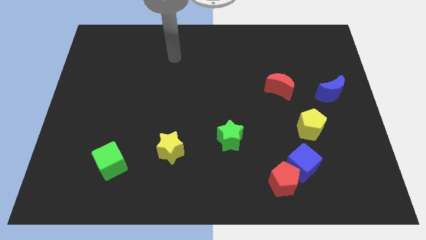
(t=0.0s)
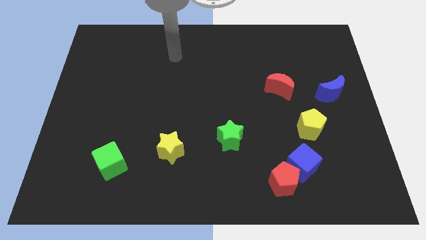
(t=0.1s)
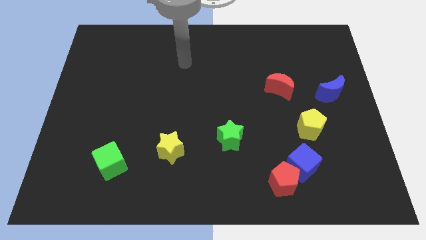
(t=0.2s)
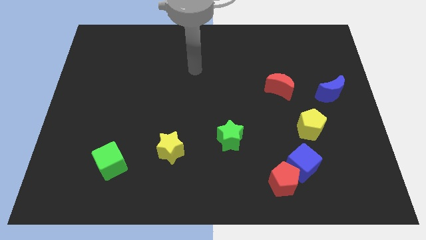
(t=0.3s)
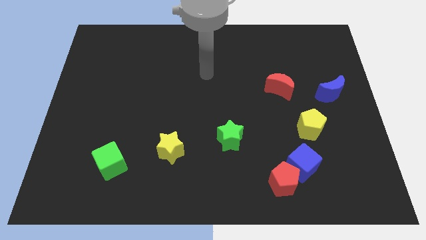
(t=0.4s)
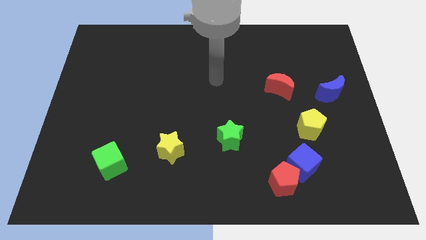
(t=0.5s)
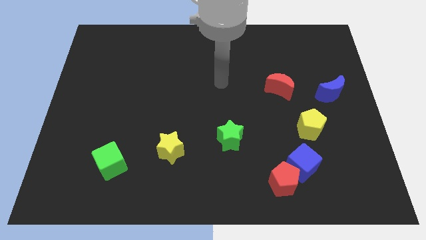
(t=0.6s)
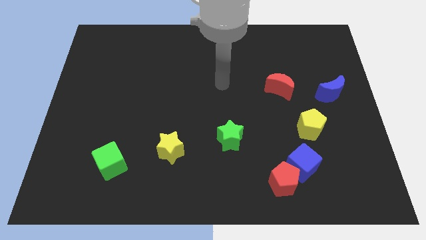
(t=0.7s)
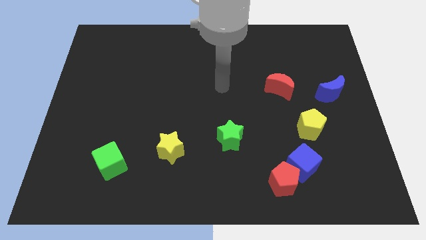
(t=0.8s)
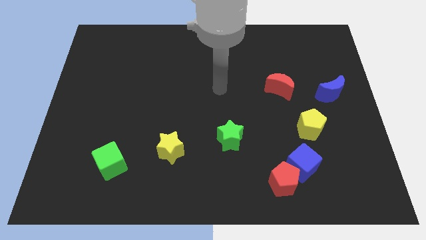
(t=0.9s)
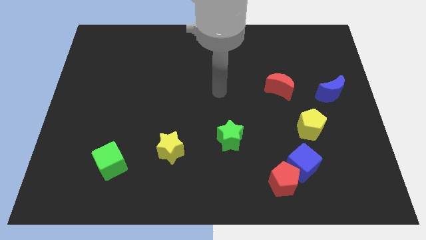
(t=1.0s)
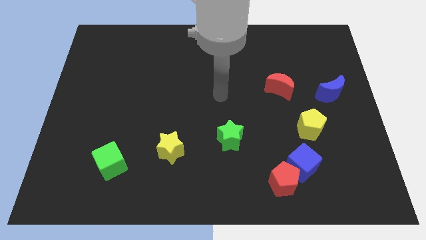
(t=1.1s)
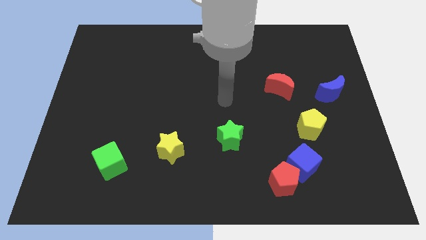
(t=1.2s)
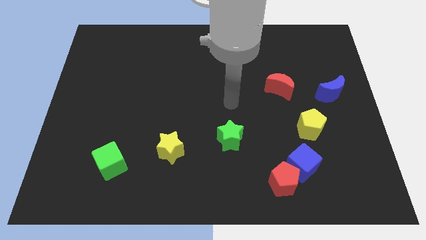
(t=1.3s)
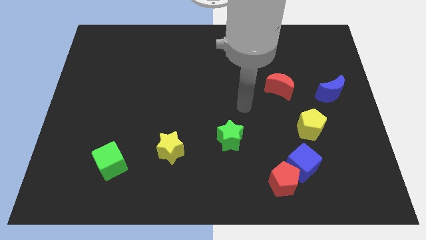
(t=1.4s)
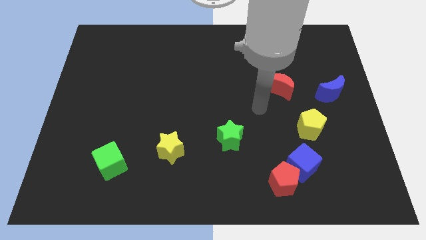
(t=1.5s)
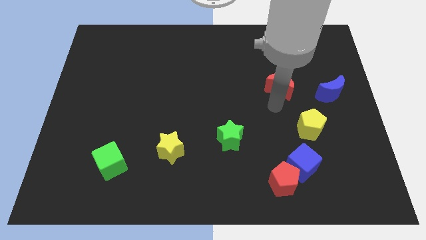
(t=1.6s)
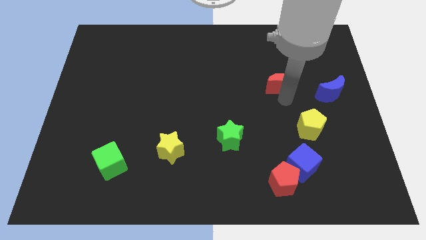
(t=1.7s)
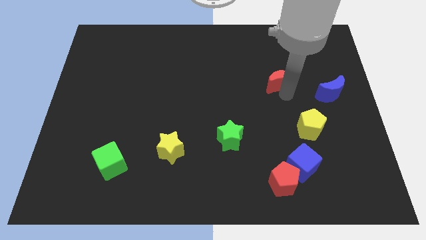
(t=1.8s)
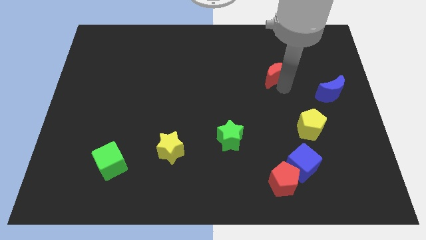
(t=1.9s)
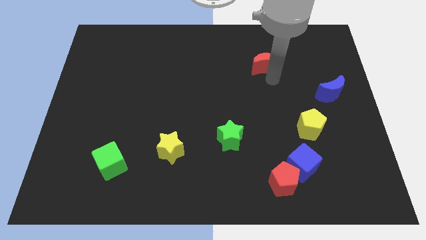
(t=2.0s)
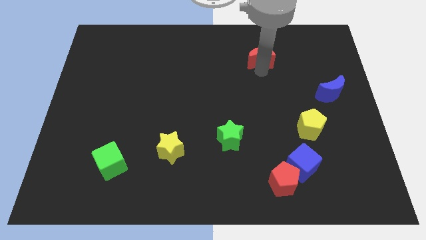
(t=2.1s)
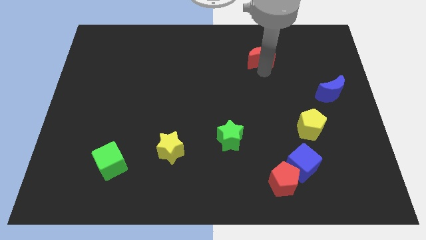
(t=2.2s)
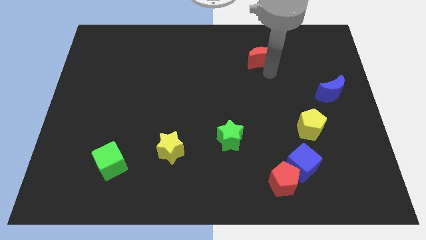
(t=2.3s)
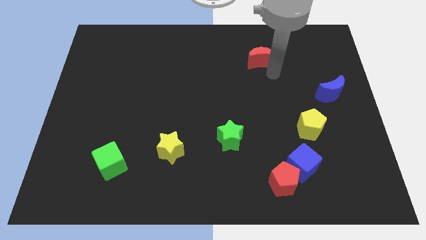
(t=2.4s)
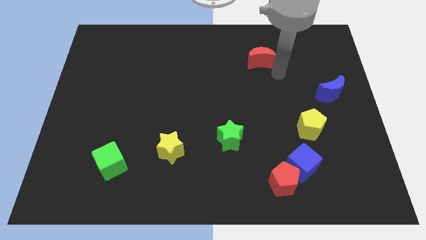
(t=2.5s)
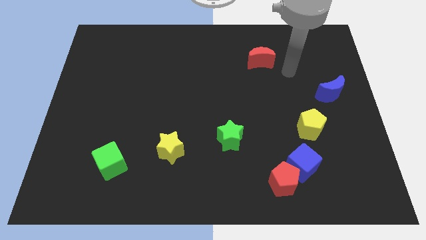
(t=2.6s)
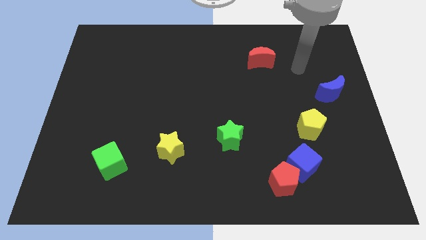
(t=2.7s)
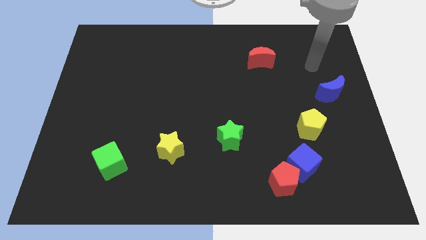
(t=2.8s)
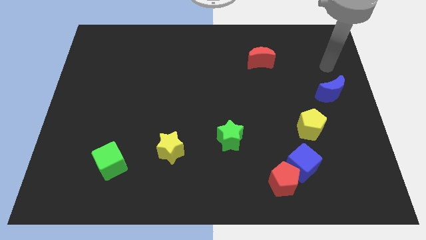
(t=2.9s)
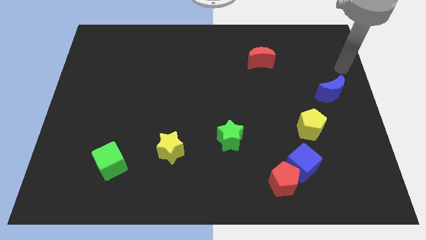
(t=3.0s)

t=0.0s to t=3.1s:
move the red moon up slightly

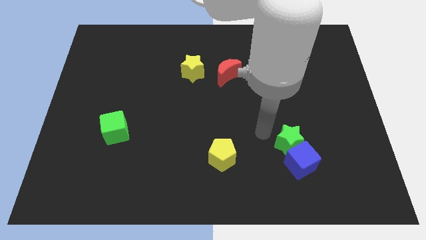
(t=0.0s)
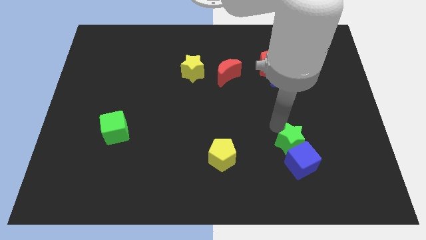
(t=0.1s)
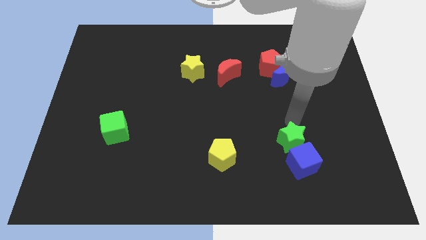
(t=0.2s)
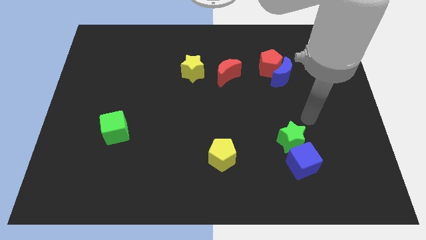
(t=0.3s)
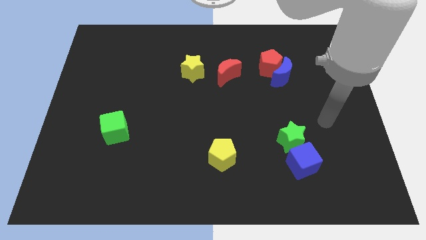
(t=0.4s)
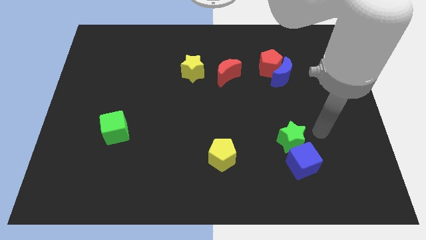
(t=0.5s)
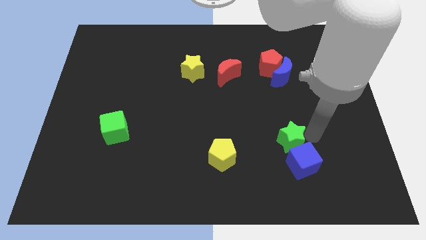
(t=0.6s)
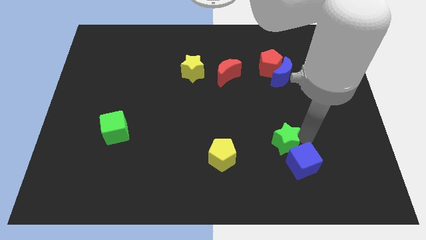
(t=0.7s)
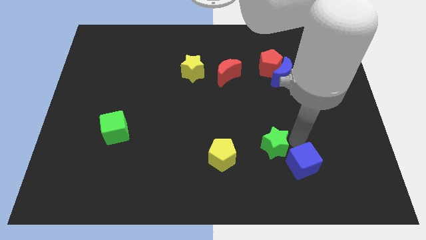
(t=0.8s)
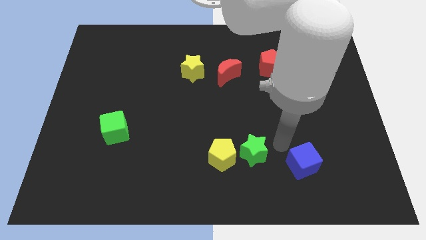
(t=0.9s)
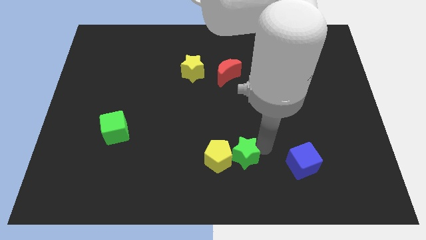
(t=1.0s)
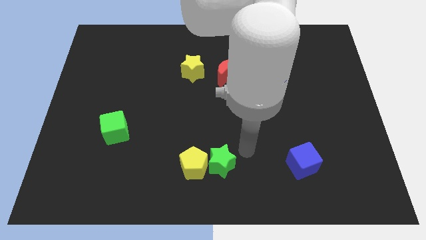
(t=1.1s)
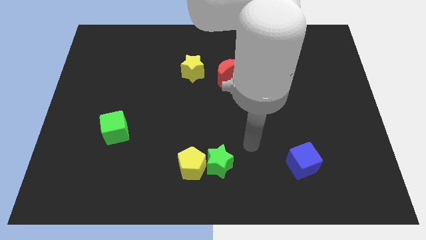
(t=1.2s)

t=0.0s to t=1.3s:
place the green star and yellow pentagon at the bottom center of the board

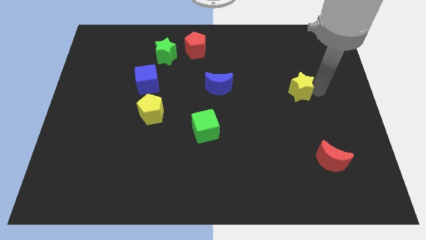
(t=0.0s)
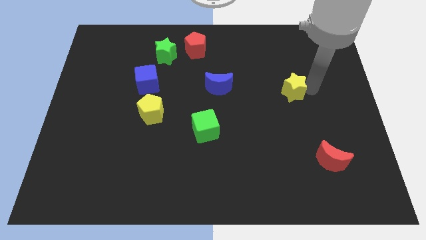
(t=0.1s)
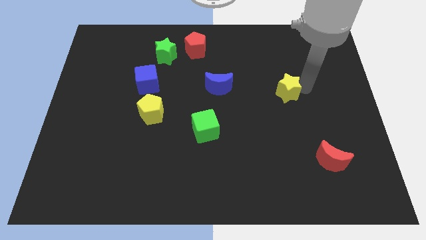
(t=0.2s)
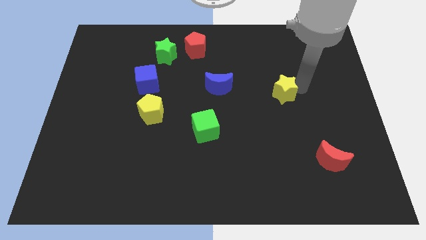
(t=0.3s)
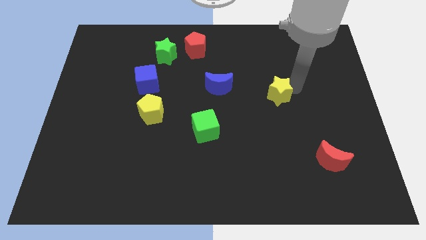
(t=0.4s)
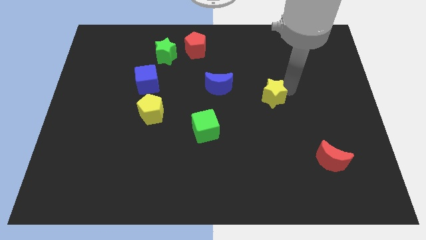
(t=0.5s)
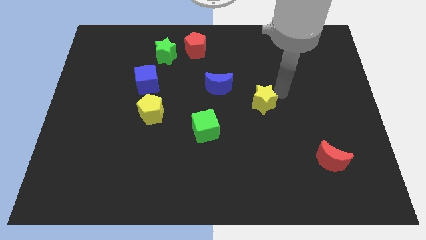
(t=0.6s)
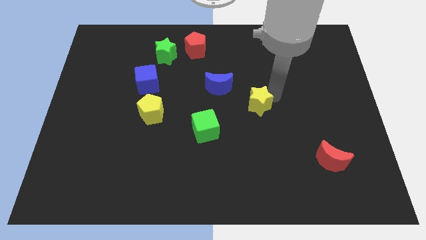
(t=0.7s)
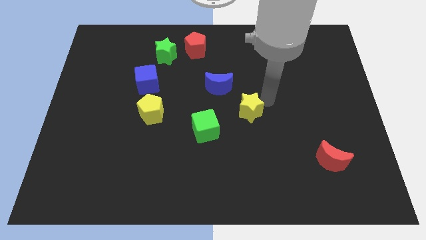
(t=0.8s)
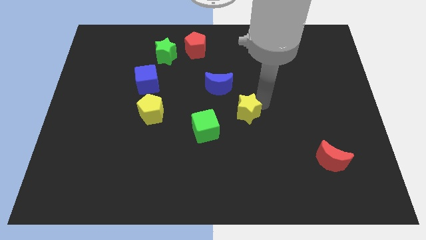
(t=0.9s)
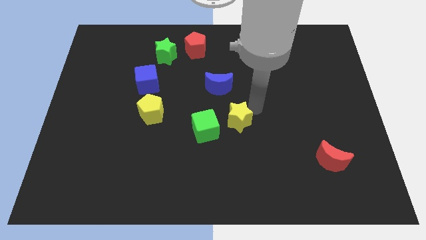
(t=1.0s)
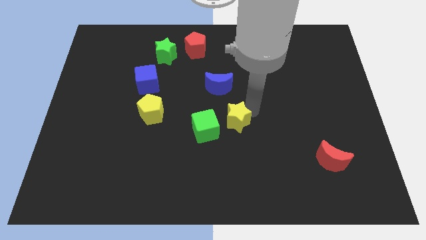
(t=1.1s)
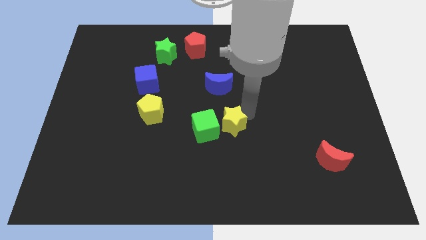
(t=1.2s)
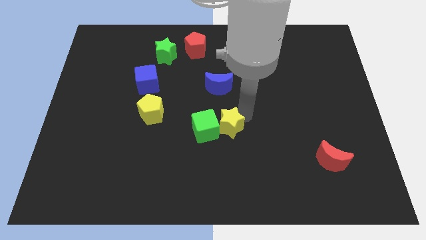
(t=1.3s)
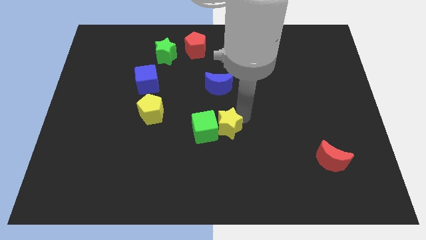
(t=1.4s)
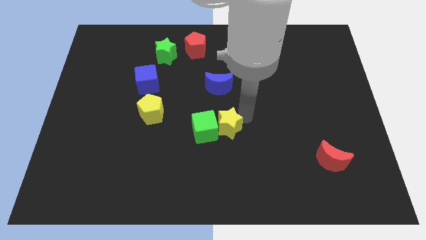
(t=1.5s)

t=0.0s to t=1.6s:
move the yellow star near to the green cube

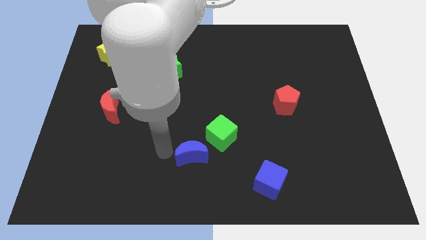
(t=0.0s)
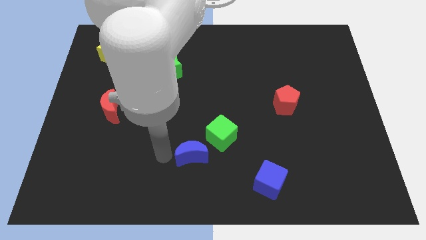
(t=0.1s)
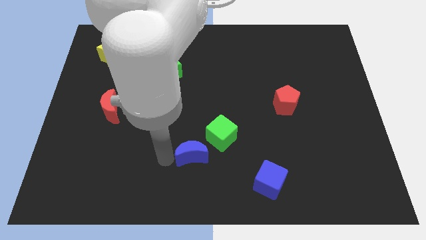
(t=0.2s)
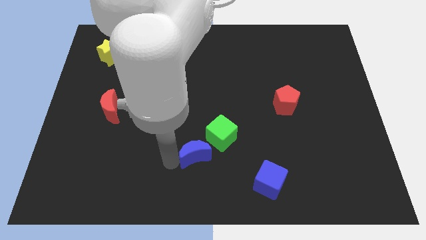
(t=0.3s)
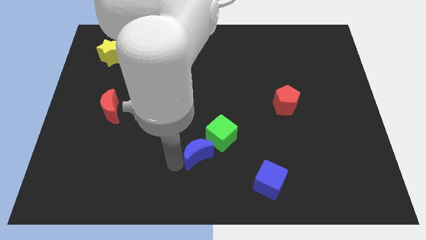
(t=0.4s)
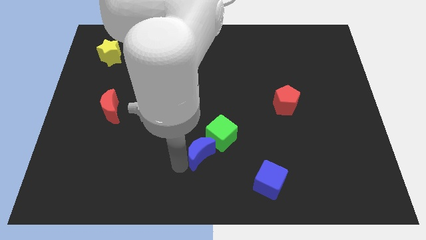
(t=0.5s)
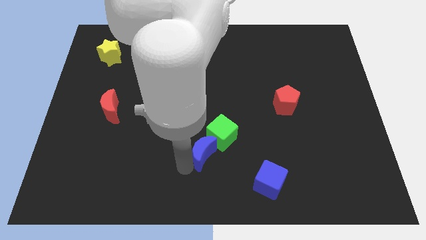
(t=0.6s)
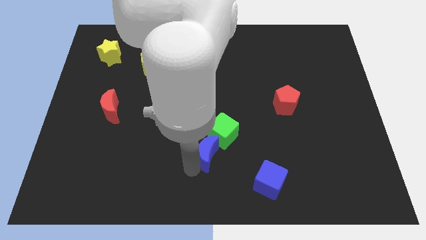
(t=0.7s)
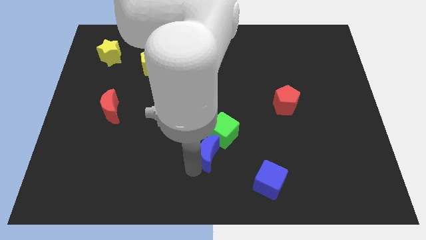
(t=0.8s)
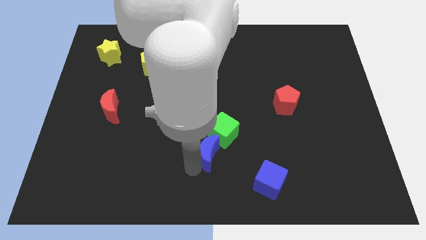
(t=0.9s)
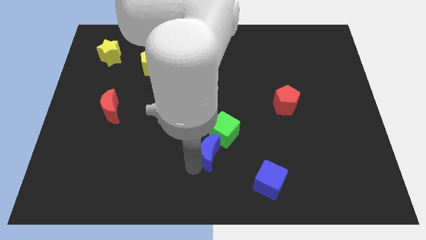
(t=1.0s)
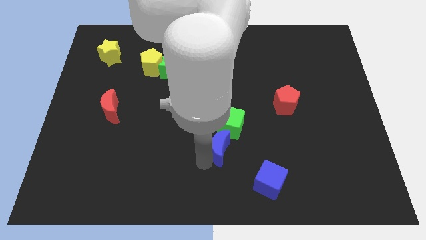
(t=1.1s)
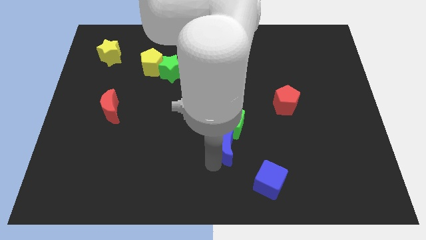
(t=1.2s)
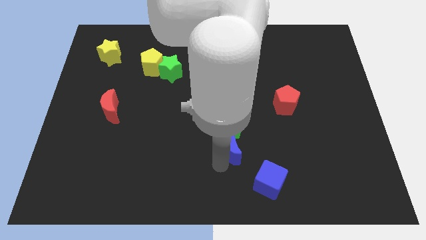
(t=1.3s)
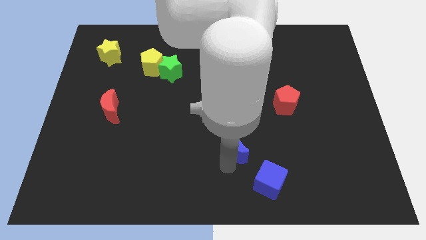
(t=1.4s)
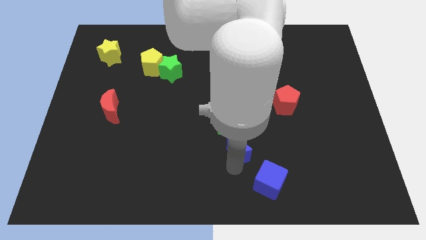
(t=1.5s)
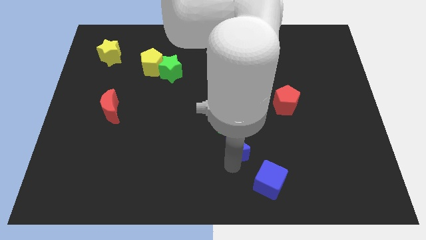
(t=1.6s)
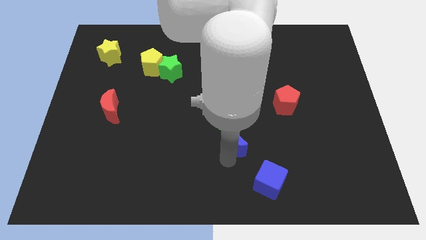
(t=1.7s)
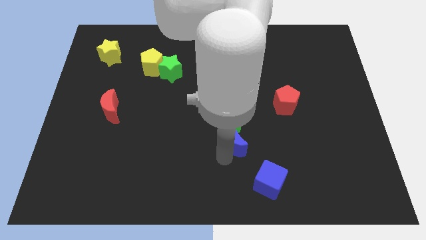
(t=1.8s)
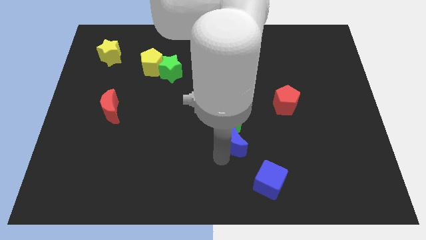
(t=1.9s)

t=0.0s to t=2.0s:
push the green cube slightly towards the top with the blue moon

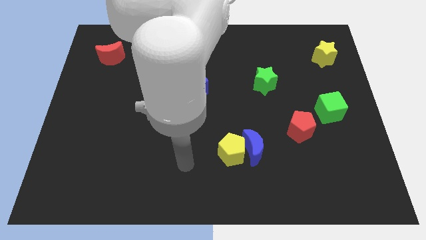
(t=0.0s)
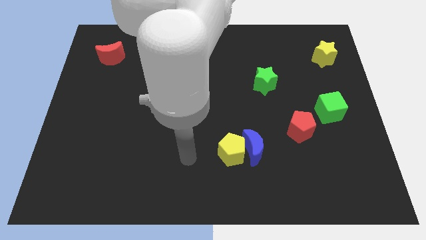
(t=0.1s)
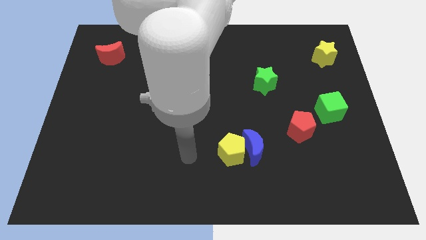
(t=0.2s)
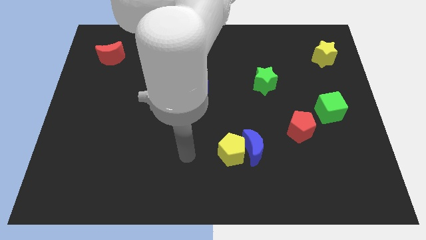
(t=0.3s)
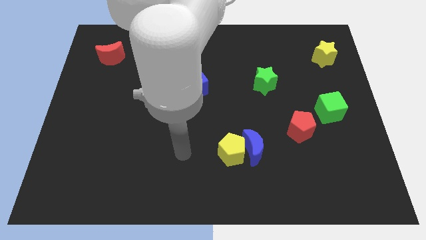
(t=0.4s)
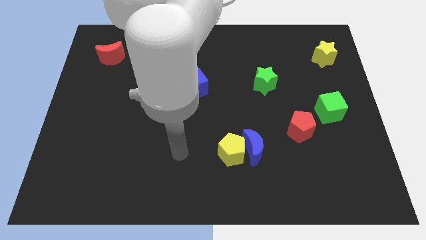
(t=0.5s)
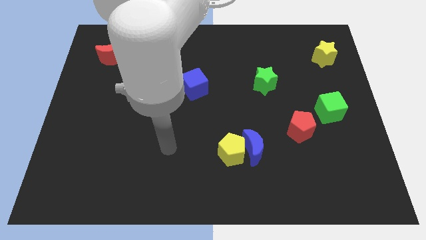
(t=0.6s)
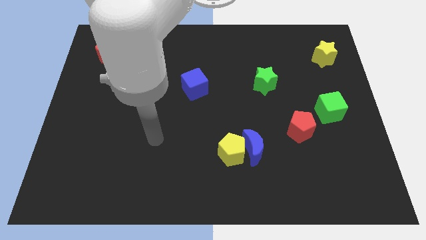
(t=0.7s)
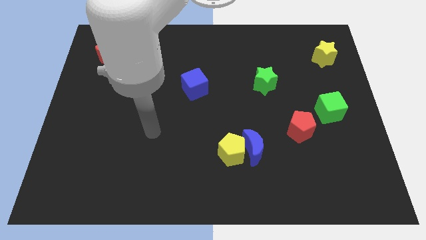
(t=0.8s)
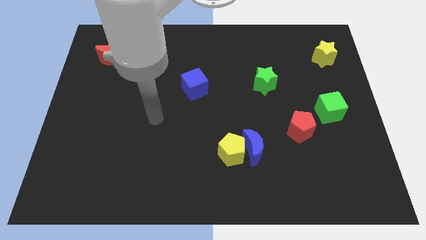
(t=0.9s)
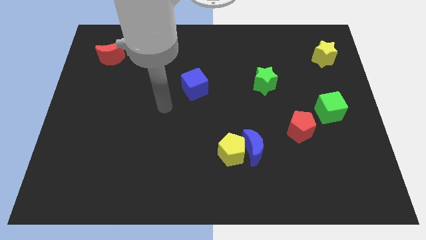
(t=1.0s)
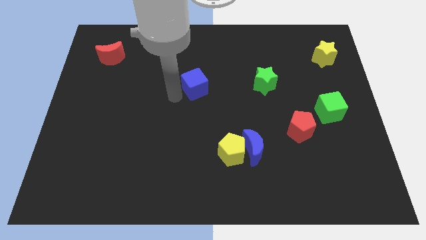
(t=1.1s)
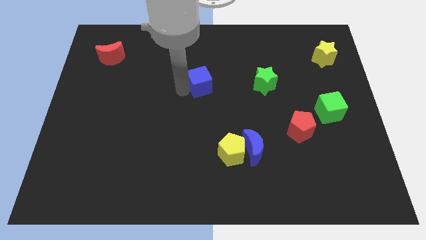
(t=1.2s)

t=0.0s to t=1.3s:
move the arm to the left side of the blue cube
